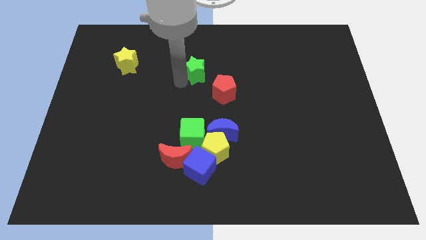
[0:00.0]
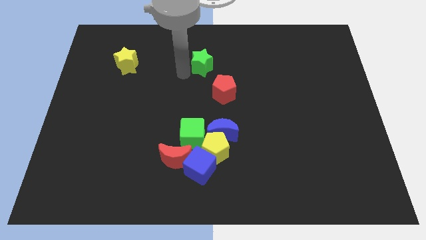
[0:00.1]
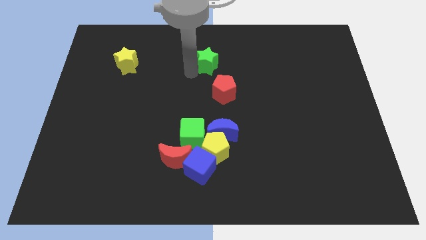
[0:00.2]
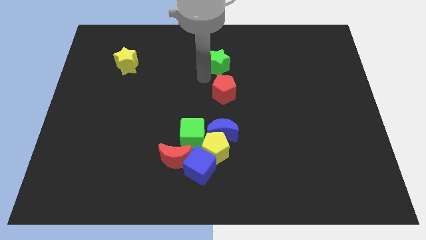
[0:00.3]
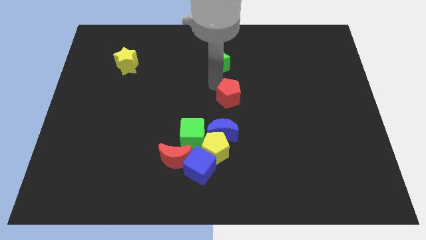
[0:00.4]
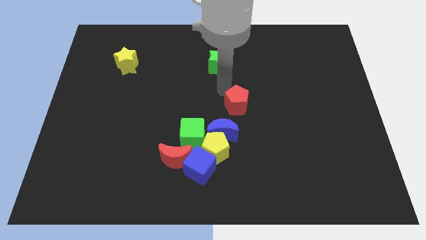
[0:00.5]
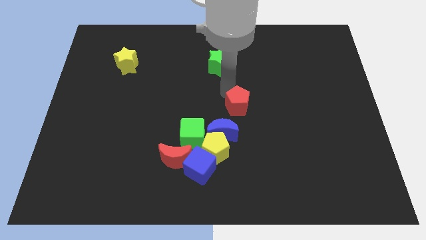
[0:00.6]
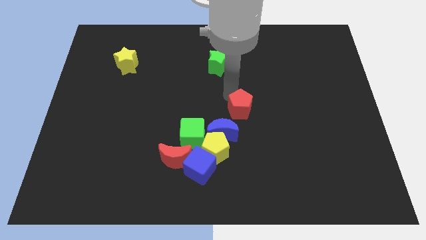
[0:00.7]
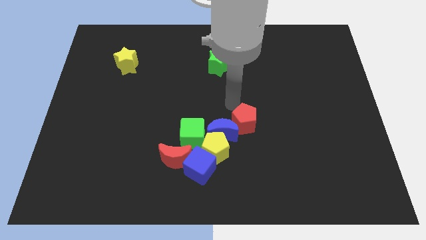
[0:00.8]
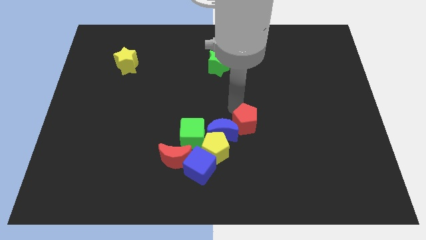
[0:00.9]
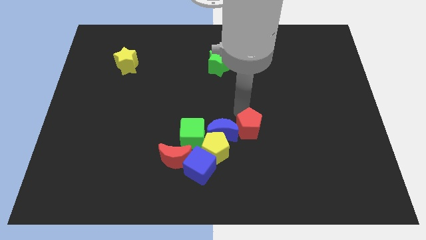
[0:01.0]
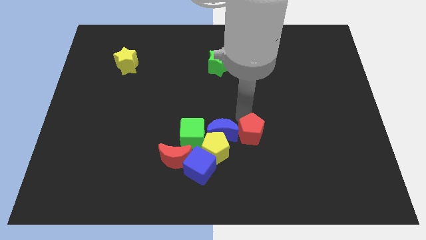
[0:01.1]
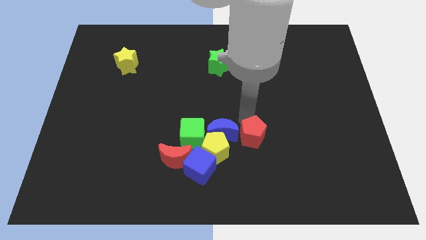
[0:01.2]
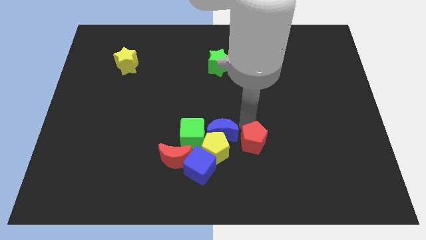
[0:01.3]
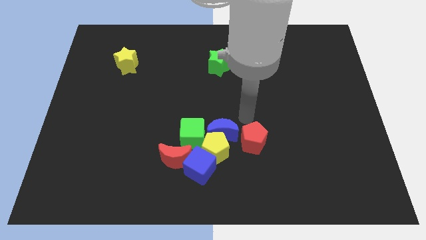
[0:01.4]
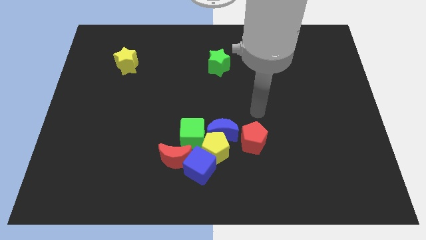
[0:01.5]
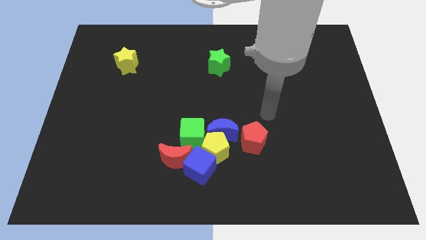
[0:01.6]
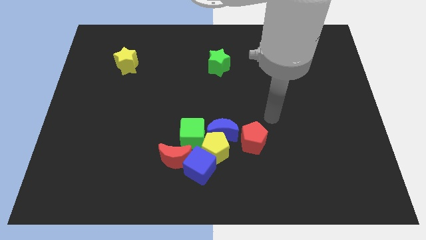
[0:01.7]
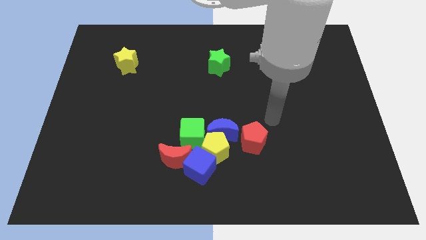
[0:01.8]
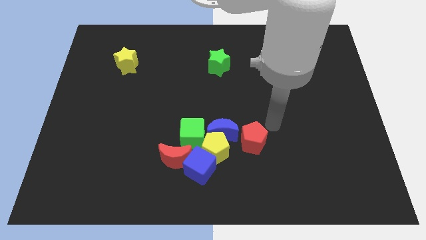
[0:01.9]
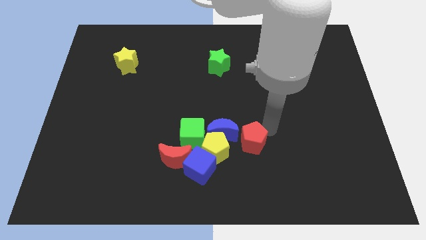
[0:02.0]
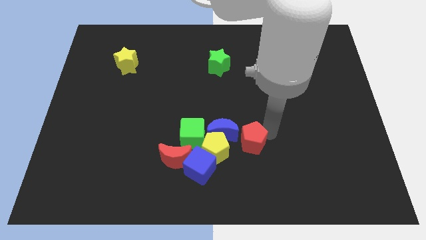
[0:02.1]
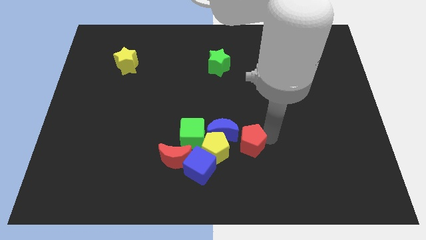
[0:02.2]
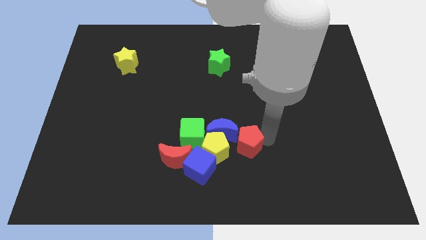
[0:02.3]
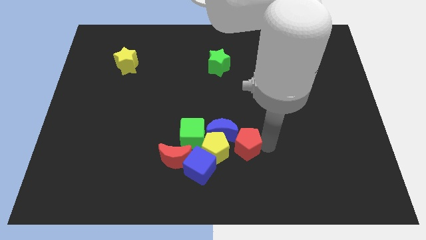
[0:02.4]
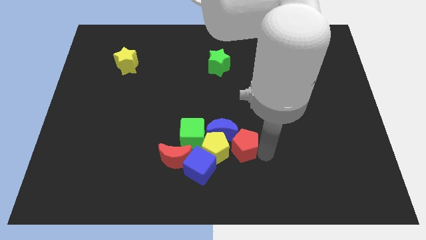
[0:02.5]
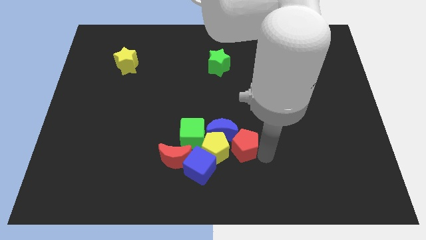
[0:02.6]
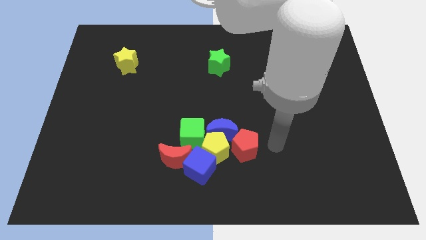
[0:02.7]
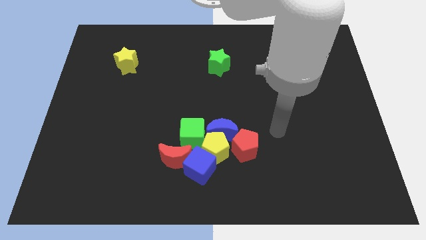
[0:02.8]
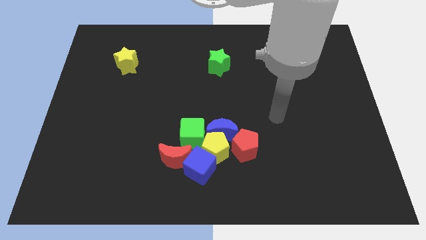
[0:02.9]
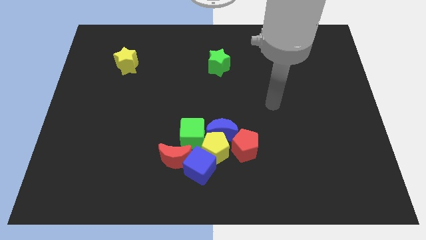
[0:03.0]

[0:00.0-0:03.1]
move the red pentagon towards the yellow pentagon

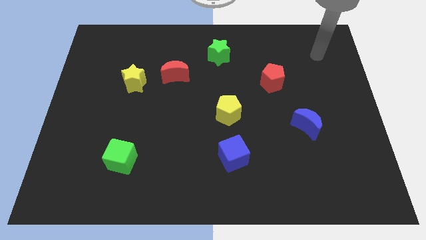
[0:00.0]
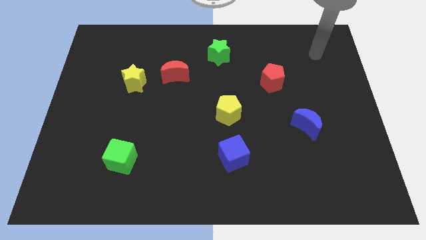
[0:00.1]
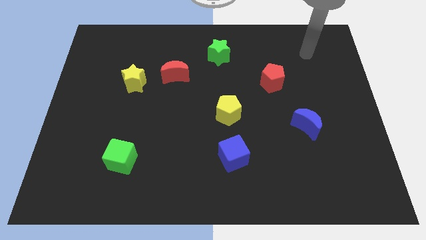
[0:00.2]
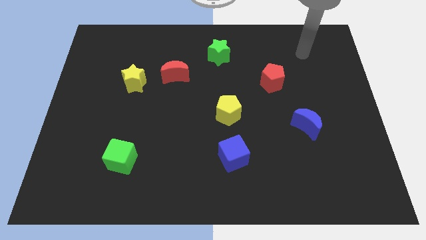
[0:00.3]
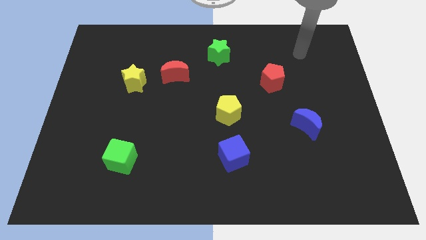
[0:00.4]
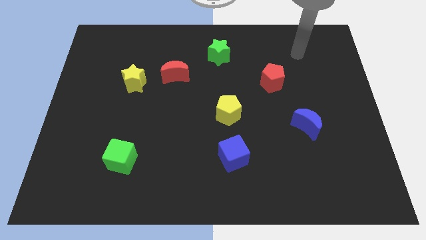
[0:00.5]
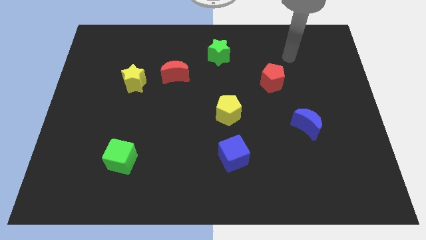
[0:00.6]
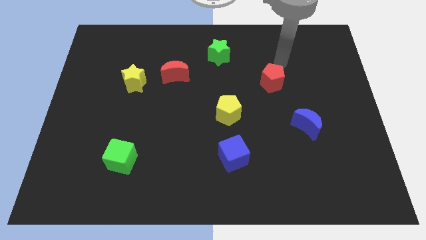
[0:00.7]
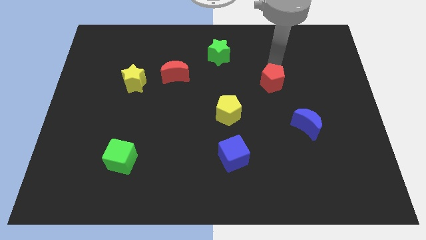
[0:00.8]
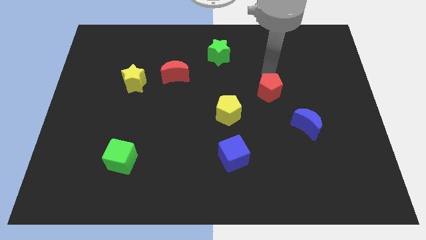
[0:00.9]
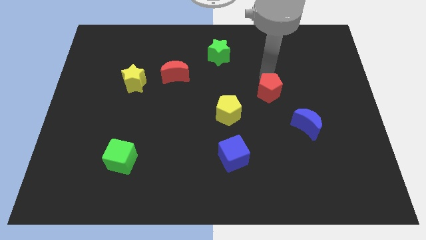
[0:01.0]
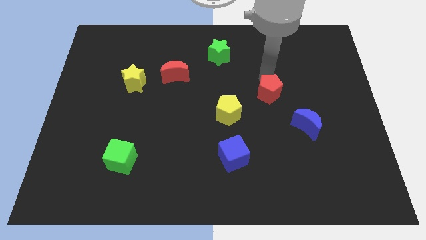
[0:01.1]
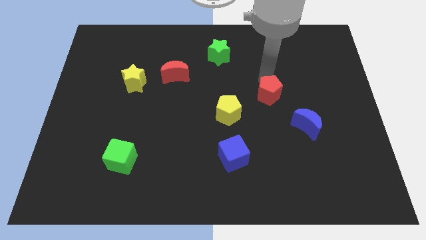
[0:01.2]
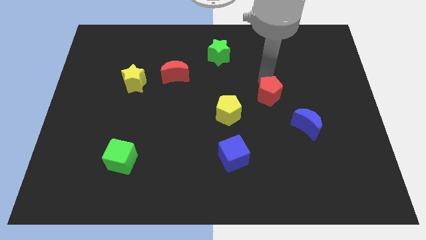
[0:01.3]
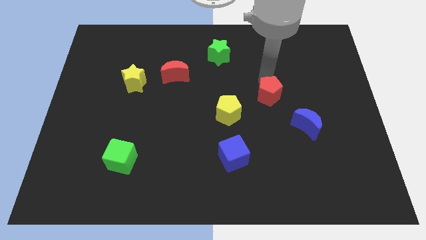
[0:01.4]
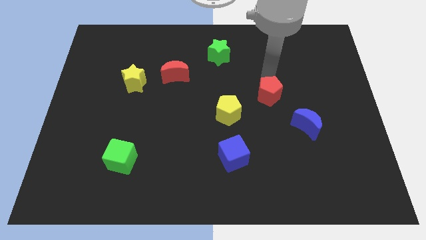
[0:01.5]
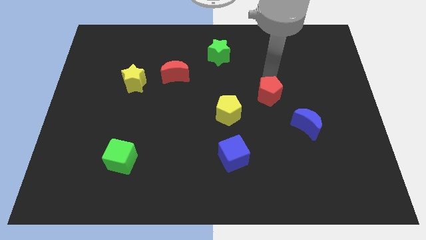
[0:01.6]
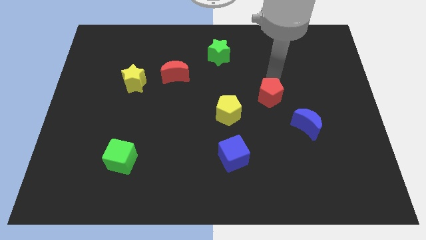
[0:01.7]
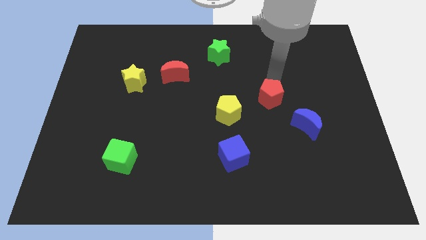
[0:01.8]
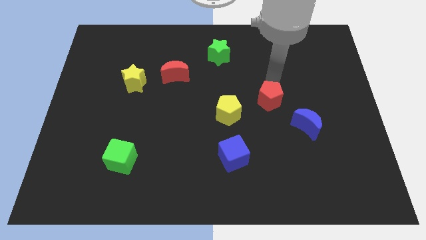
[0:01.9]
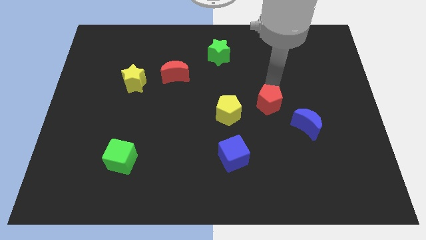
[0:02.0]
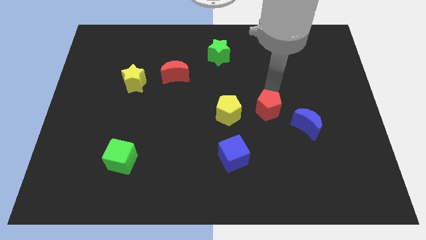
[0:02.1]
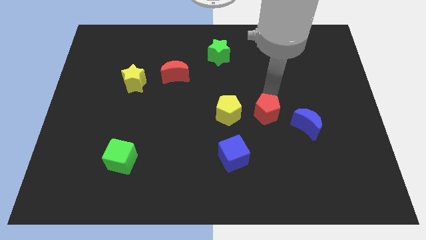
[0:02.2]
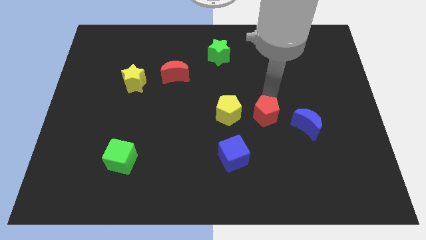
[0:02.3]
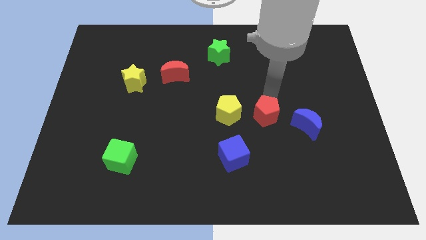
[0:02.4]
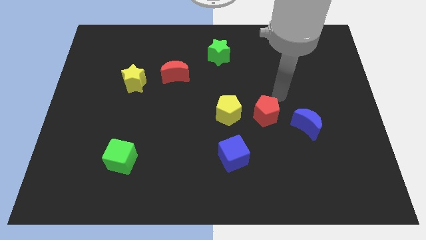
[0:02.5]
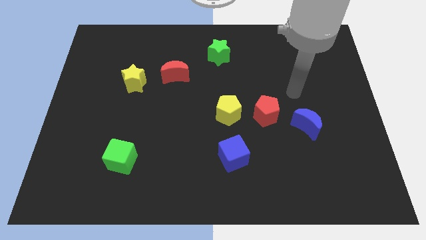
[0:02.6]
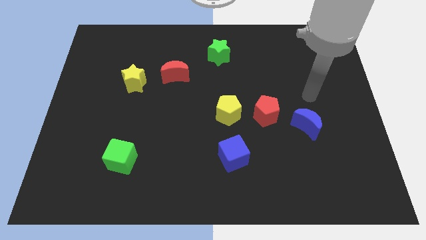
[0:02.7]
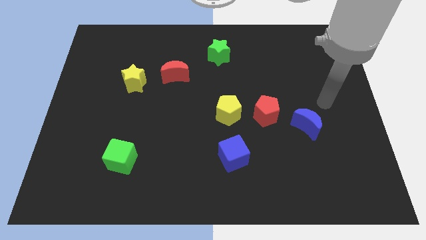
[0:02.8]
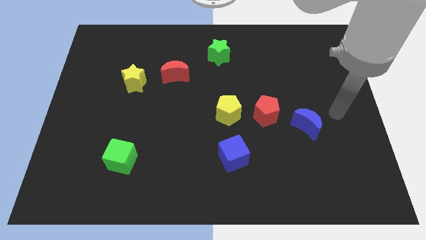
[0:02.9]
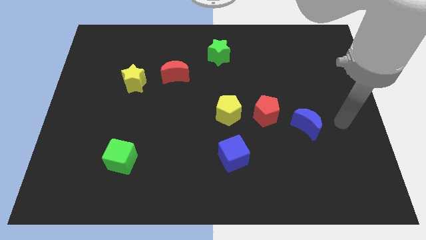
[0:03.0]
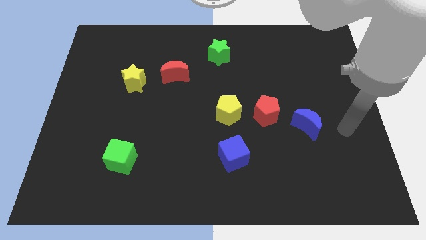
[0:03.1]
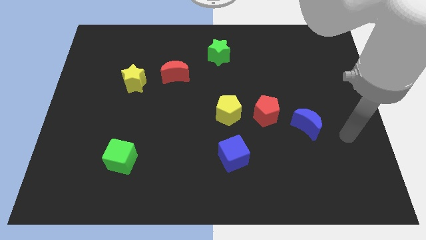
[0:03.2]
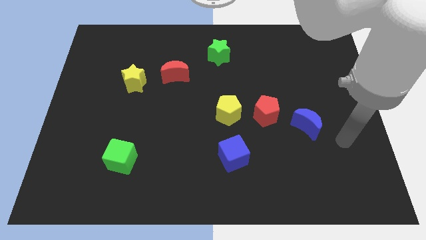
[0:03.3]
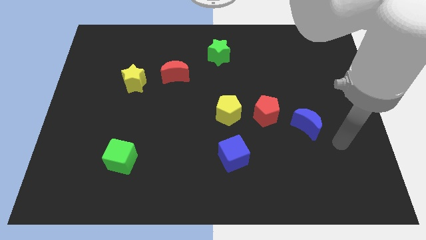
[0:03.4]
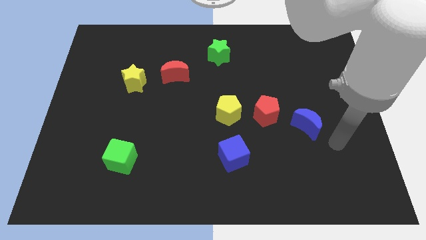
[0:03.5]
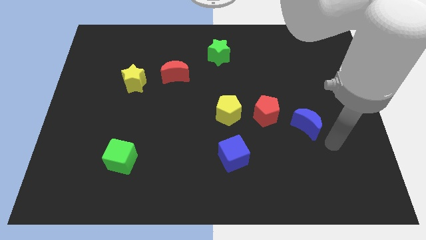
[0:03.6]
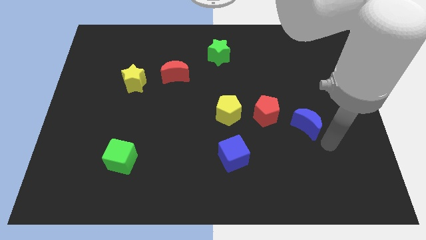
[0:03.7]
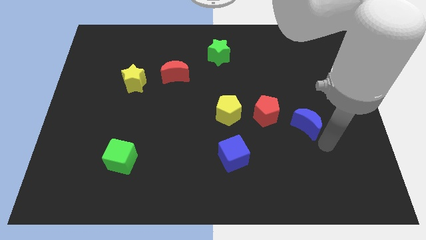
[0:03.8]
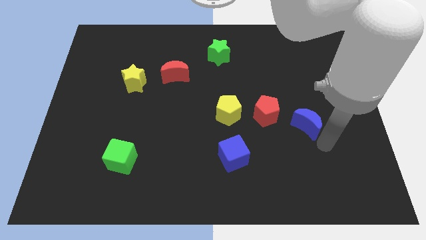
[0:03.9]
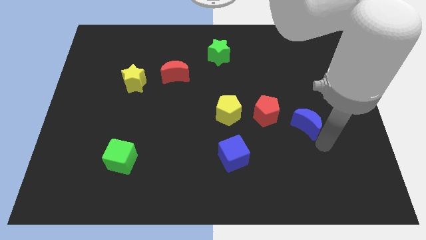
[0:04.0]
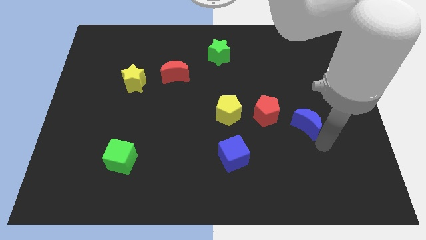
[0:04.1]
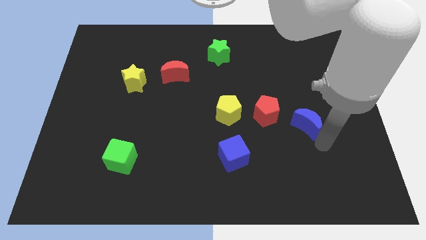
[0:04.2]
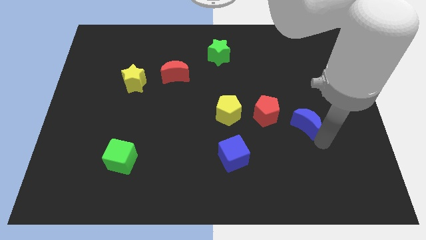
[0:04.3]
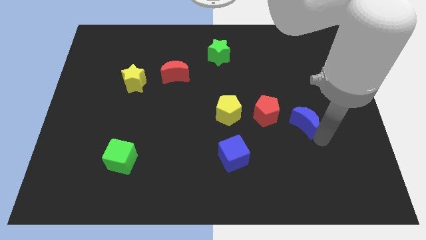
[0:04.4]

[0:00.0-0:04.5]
move red pentagon towards the yellow pentagon

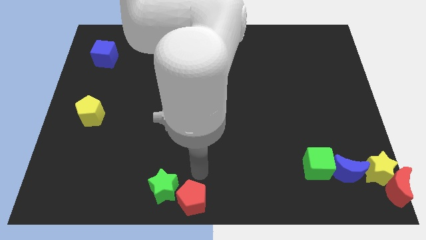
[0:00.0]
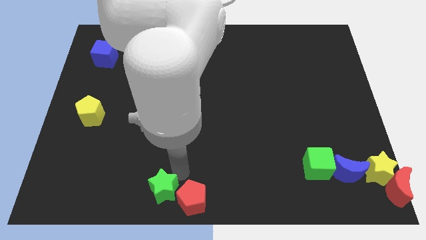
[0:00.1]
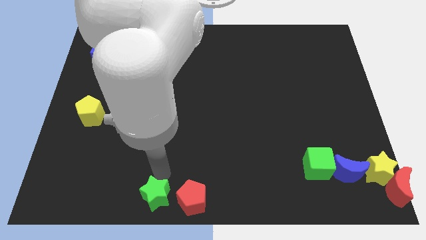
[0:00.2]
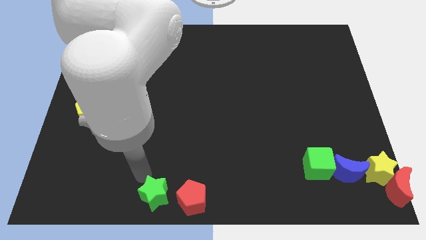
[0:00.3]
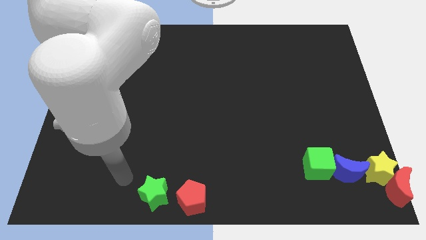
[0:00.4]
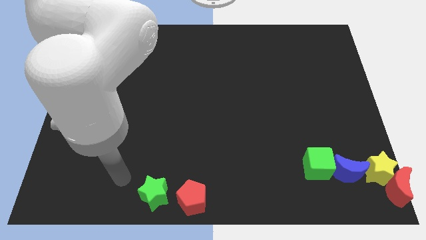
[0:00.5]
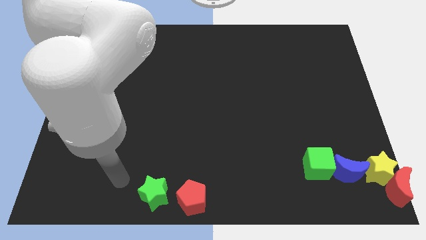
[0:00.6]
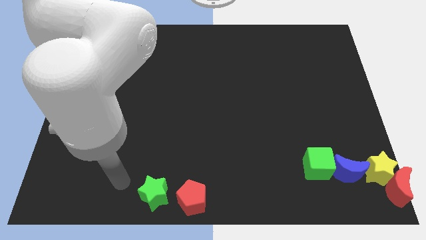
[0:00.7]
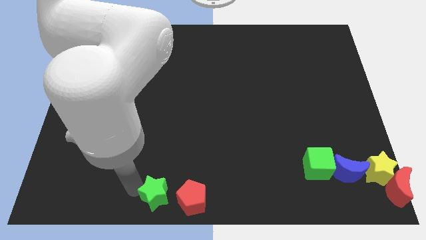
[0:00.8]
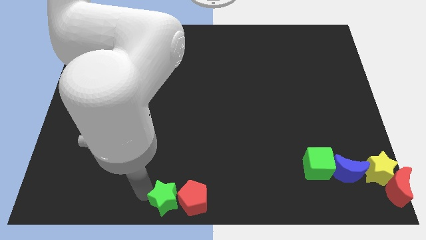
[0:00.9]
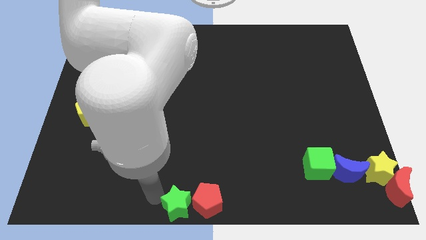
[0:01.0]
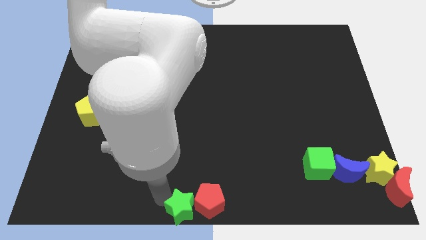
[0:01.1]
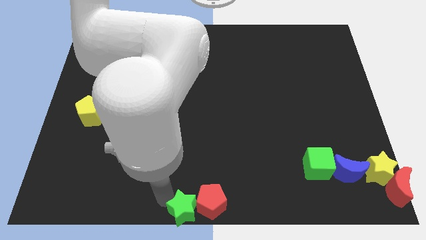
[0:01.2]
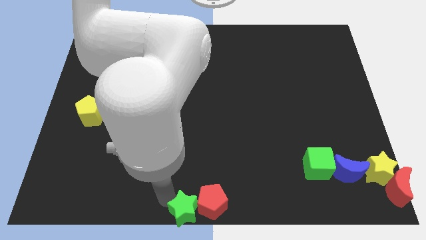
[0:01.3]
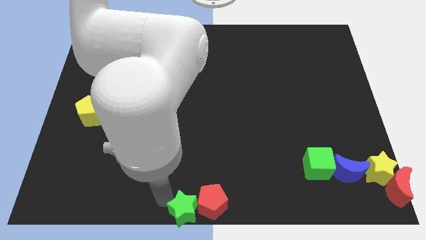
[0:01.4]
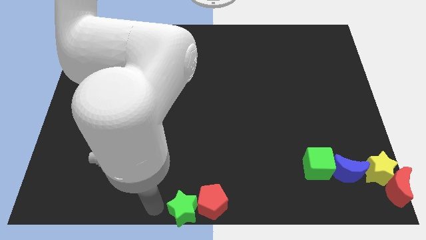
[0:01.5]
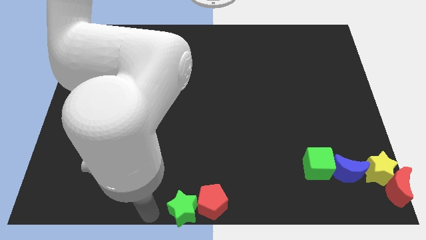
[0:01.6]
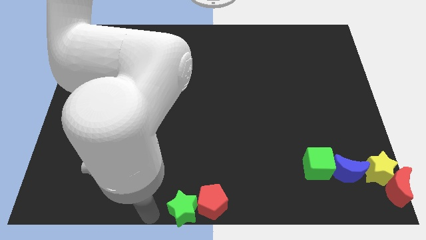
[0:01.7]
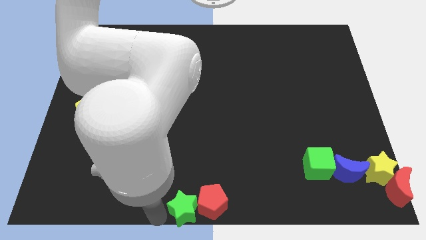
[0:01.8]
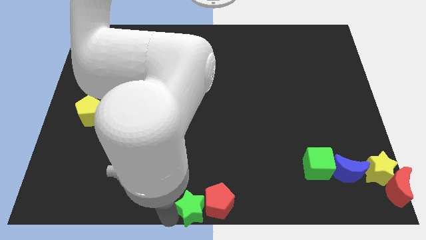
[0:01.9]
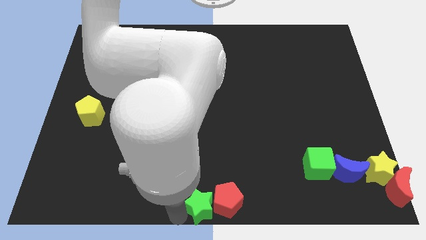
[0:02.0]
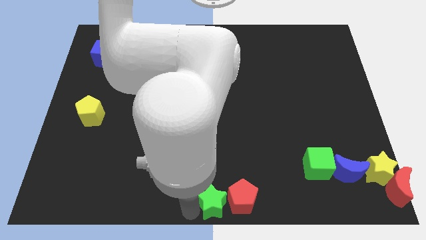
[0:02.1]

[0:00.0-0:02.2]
push the green star with red pentagon to the bottom center
